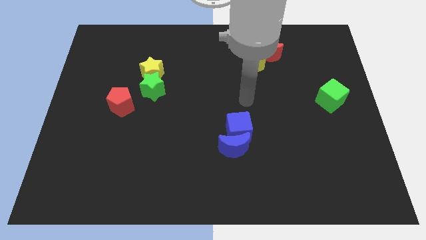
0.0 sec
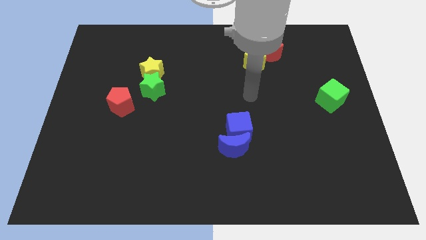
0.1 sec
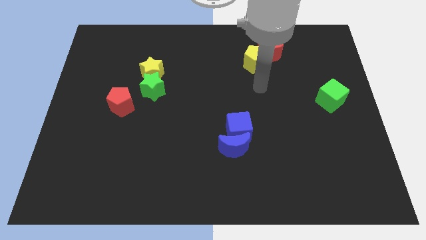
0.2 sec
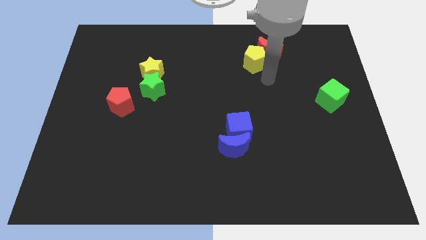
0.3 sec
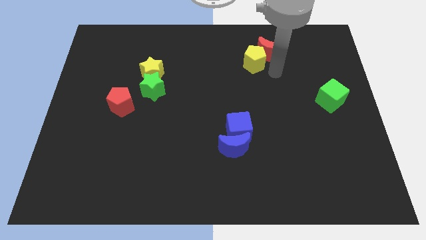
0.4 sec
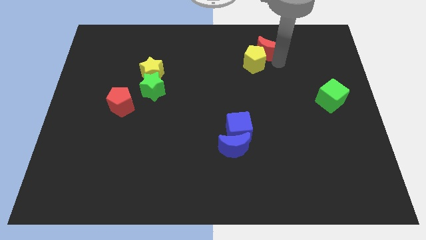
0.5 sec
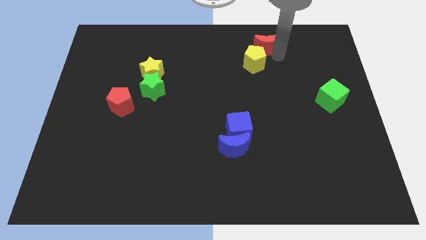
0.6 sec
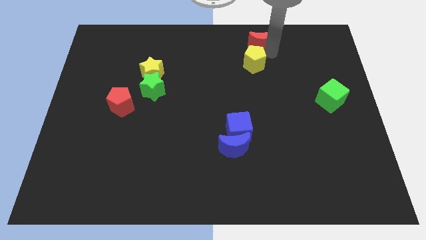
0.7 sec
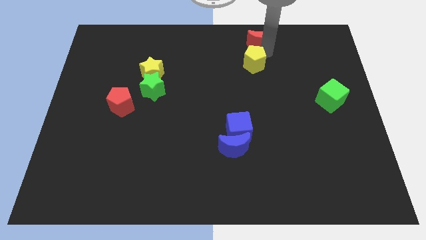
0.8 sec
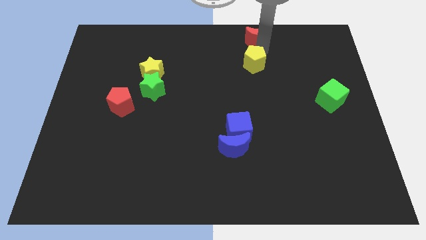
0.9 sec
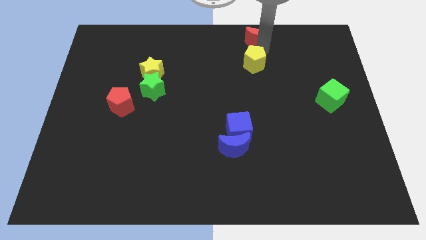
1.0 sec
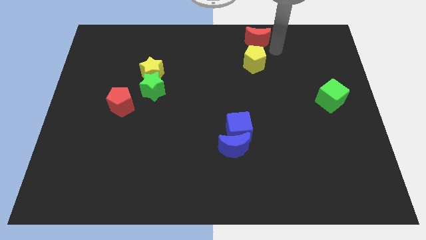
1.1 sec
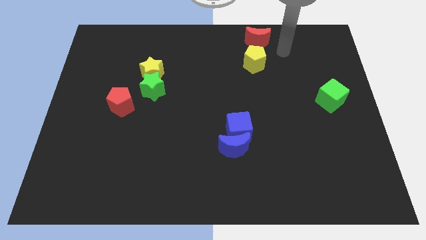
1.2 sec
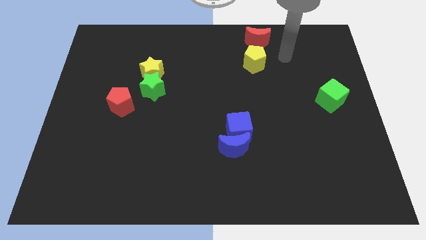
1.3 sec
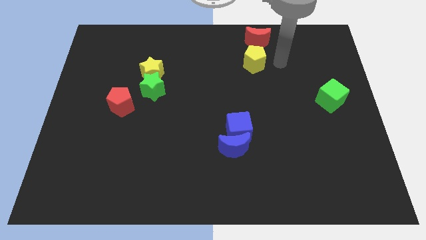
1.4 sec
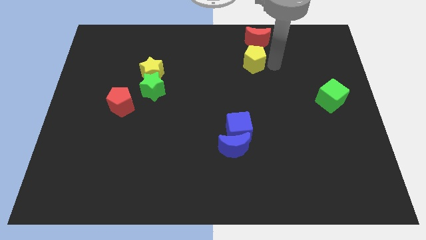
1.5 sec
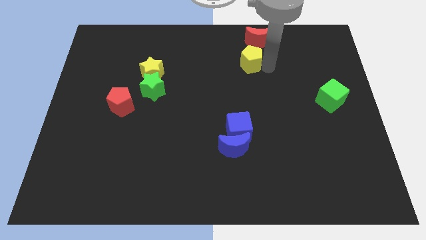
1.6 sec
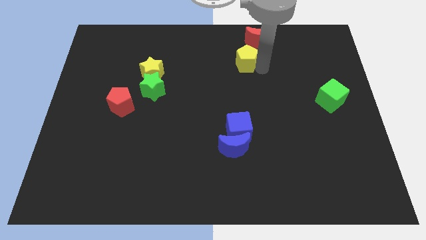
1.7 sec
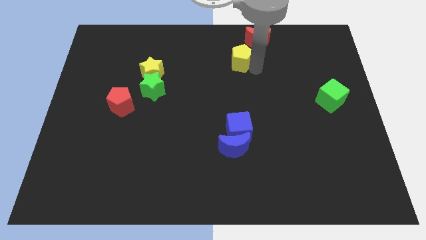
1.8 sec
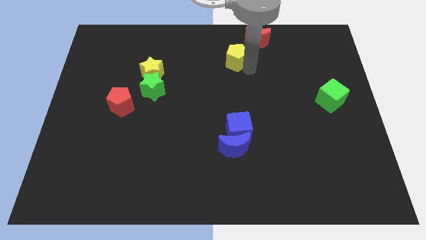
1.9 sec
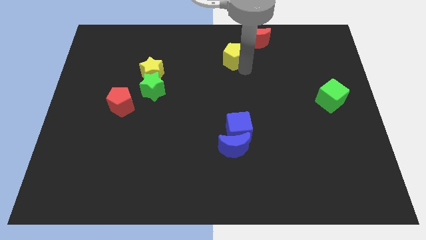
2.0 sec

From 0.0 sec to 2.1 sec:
separate the red moon and yellow pentagon

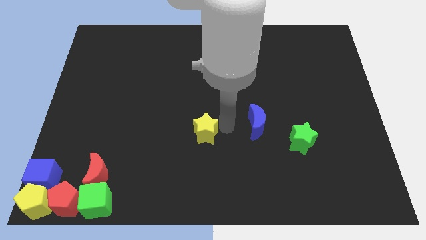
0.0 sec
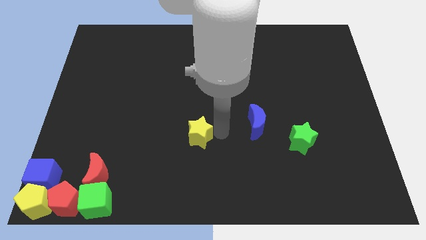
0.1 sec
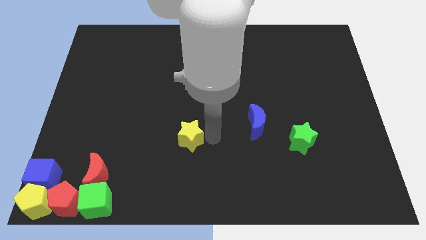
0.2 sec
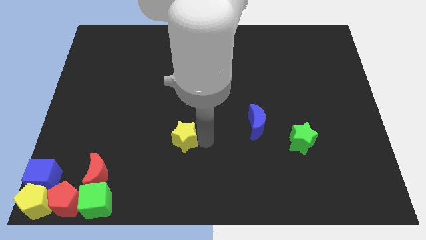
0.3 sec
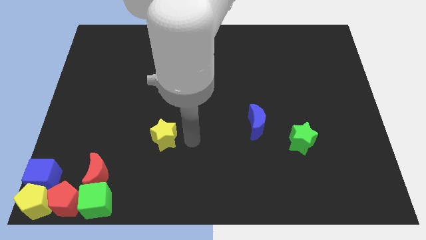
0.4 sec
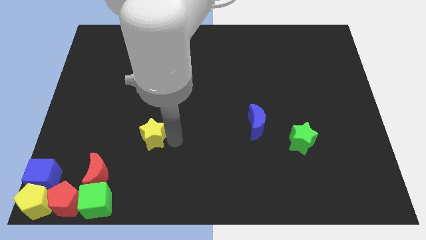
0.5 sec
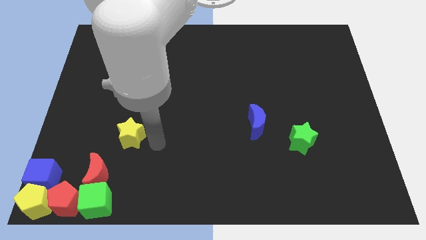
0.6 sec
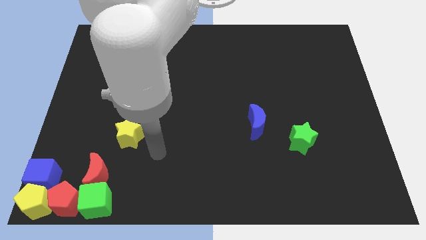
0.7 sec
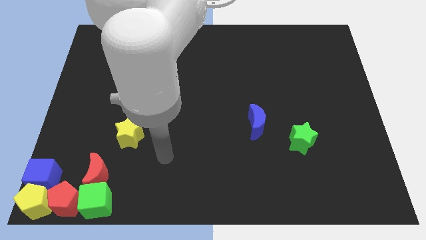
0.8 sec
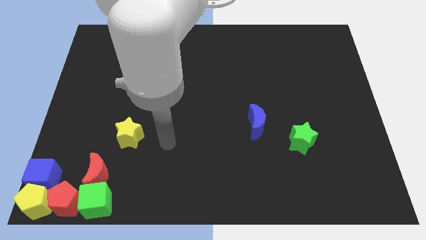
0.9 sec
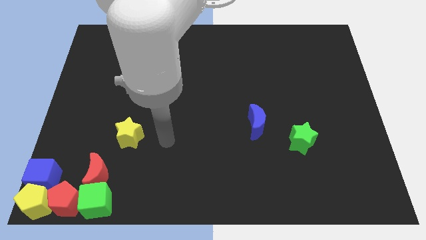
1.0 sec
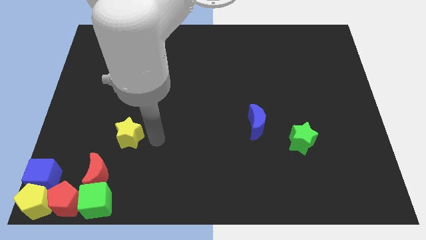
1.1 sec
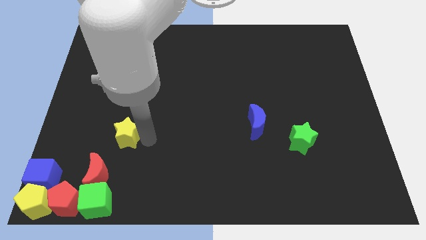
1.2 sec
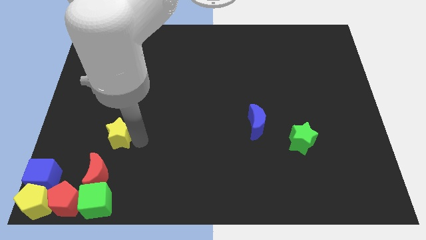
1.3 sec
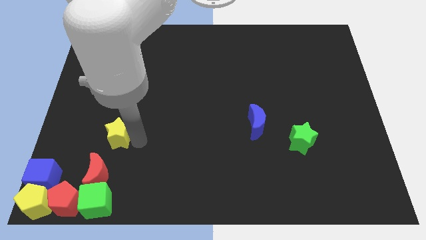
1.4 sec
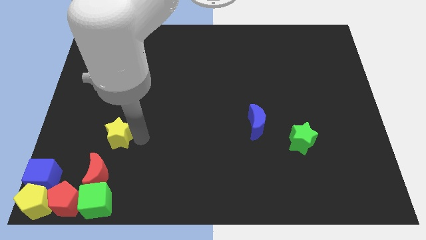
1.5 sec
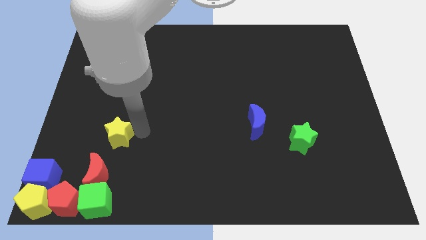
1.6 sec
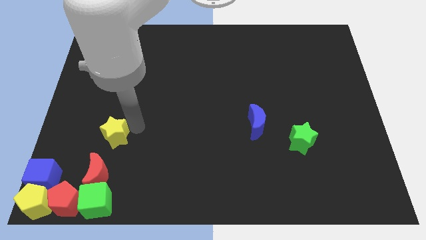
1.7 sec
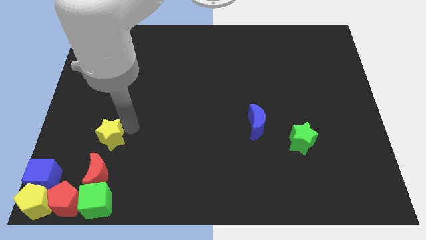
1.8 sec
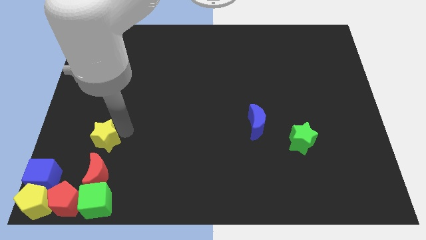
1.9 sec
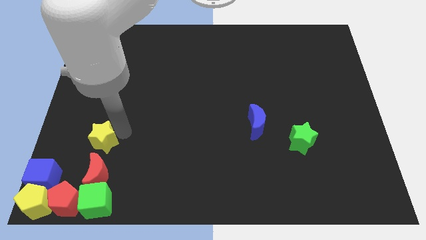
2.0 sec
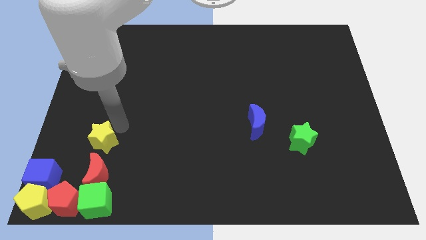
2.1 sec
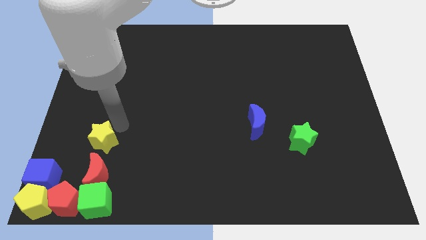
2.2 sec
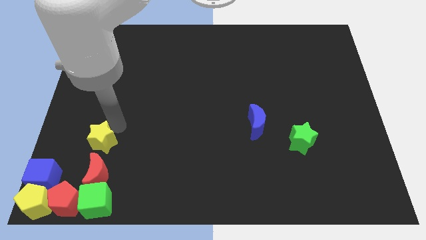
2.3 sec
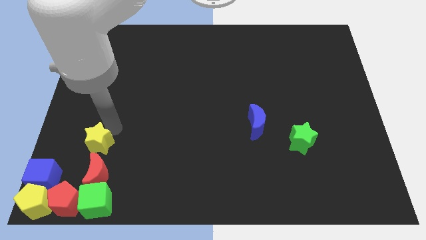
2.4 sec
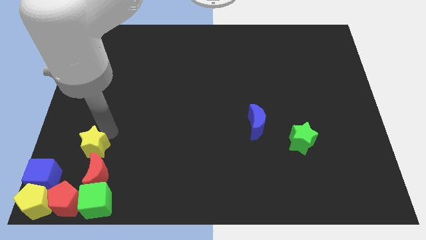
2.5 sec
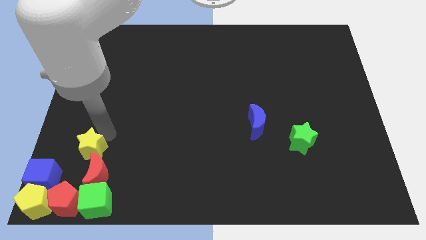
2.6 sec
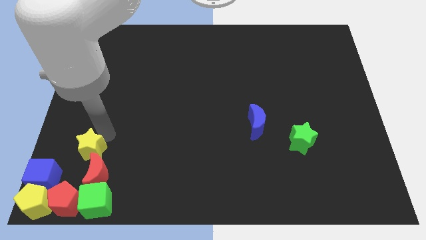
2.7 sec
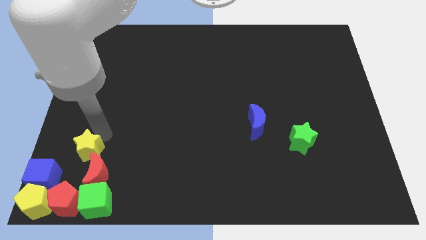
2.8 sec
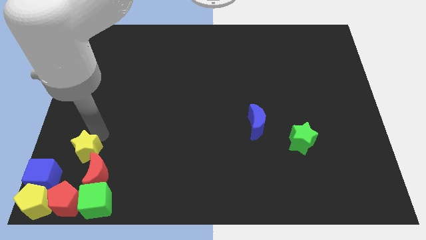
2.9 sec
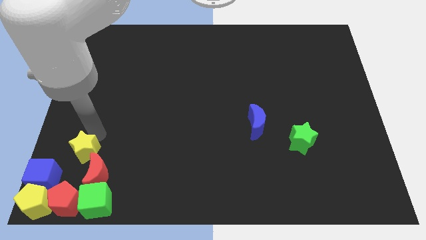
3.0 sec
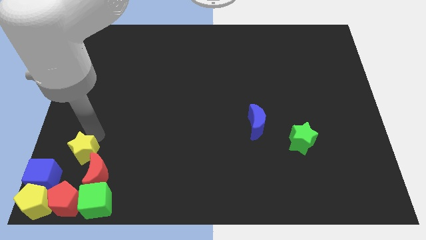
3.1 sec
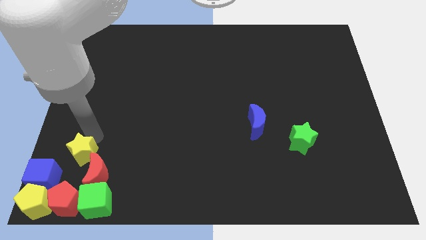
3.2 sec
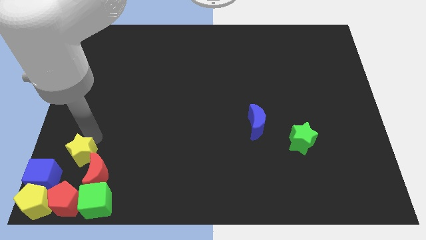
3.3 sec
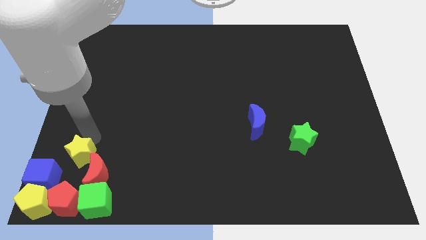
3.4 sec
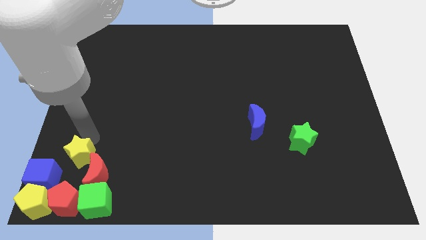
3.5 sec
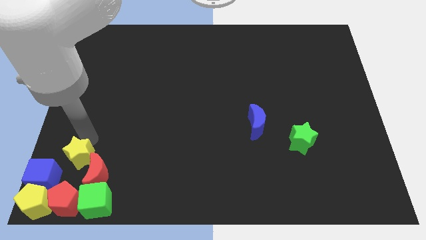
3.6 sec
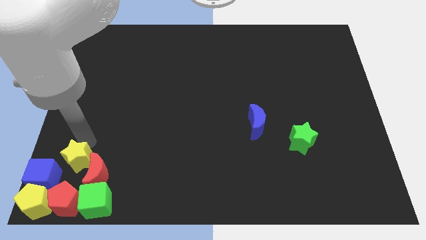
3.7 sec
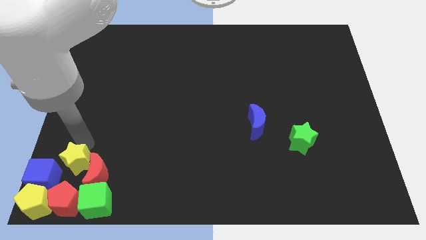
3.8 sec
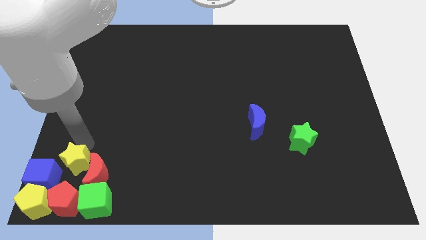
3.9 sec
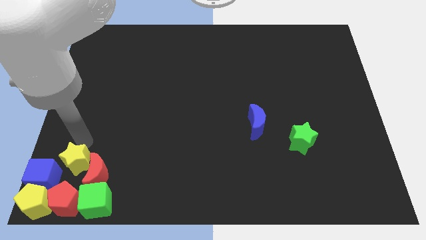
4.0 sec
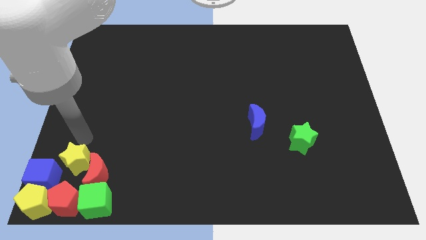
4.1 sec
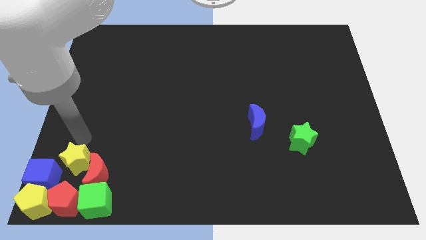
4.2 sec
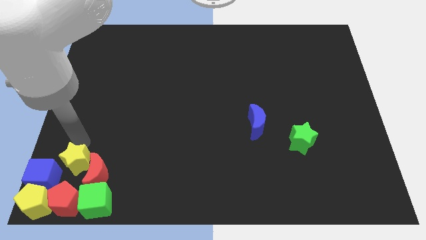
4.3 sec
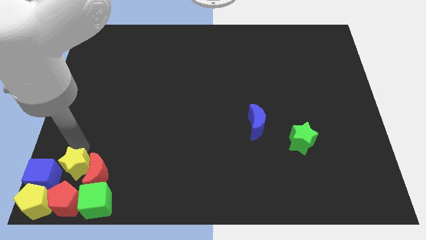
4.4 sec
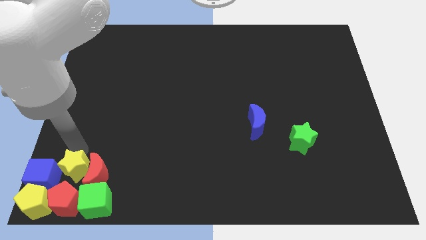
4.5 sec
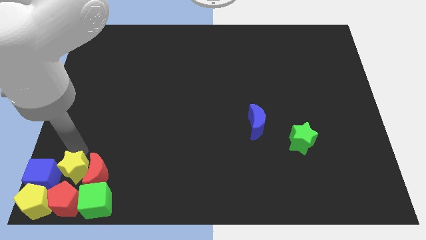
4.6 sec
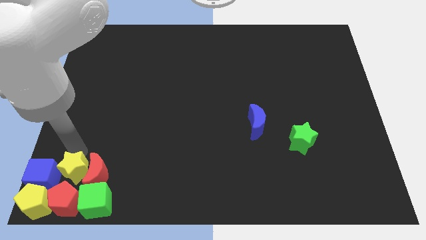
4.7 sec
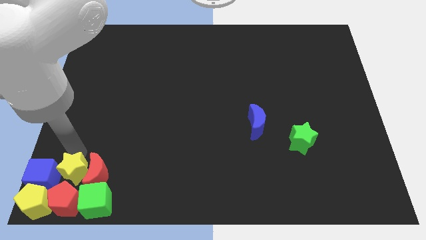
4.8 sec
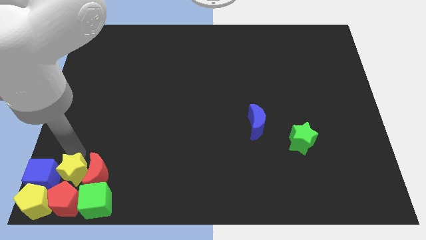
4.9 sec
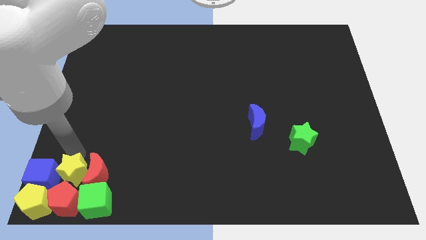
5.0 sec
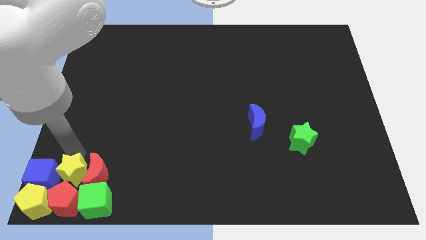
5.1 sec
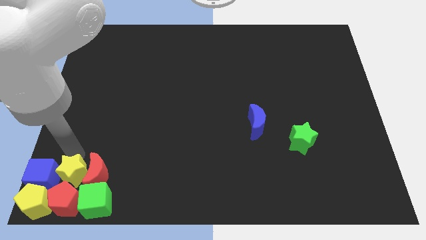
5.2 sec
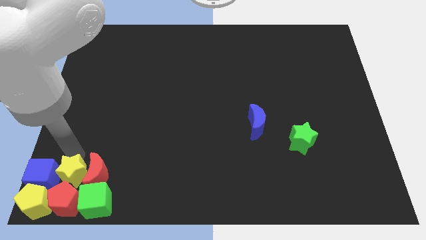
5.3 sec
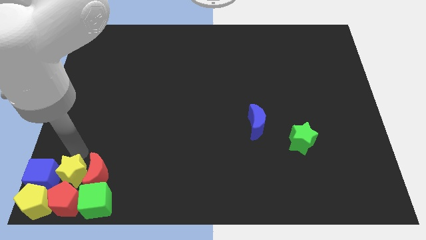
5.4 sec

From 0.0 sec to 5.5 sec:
push the yellow star in between the red crescent and blue cube

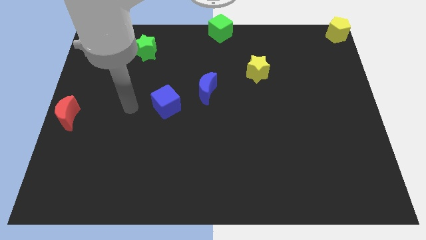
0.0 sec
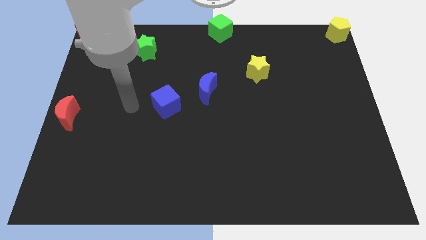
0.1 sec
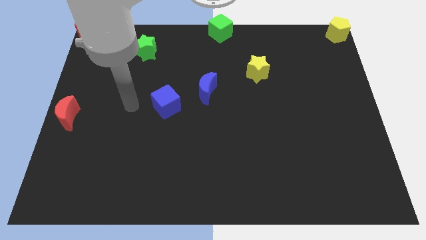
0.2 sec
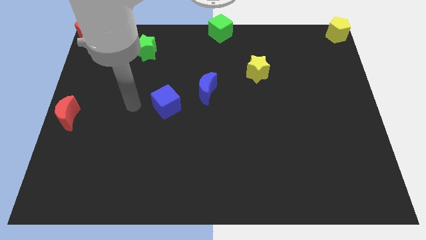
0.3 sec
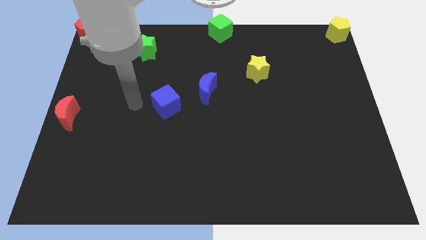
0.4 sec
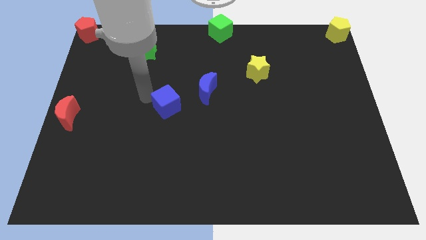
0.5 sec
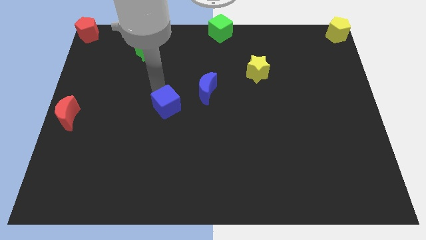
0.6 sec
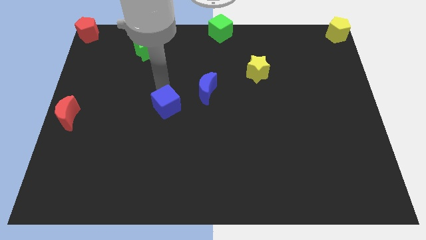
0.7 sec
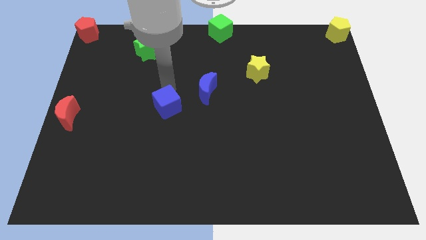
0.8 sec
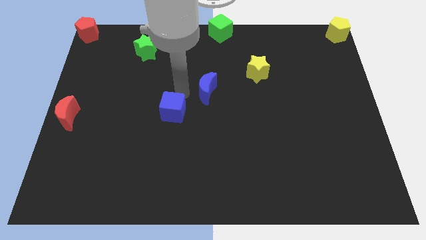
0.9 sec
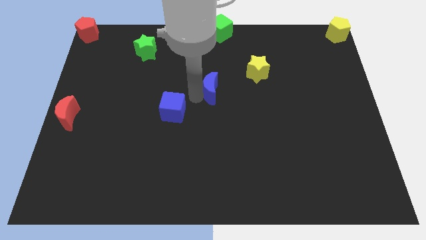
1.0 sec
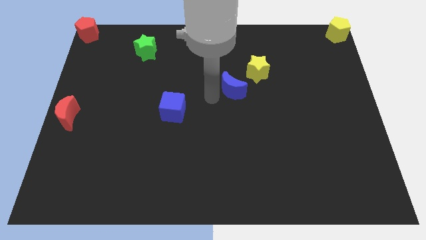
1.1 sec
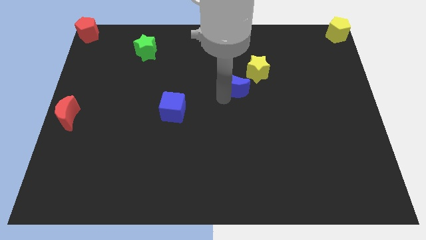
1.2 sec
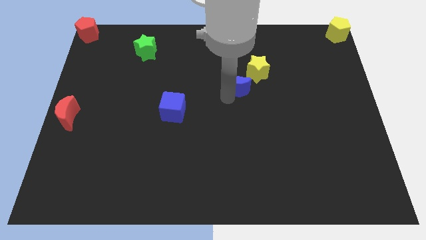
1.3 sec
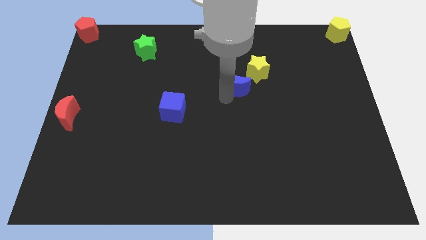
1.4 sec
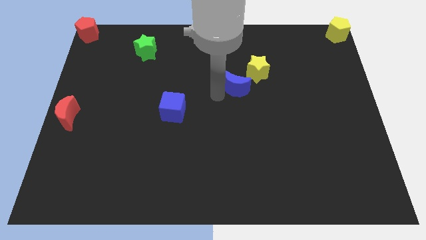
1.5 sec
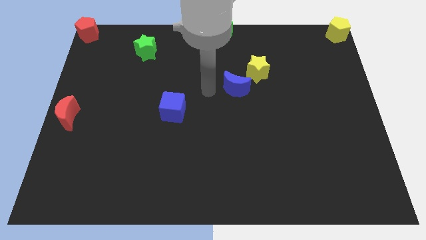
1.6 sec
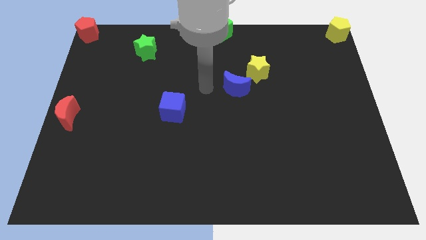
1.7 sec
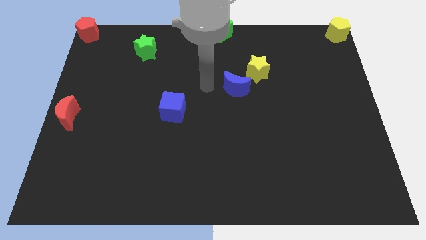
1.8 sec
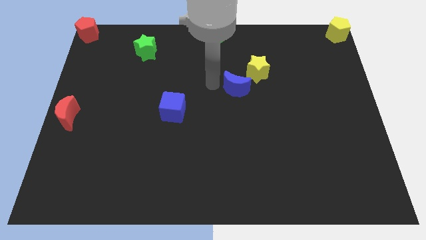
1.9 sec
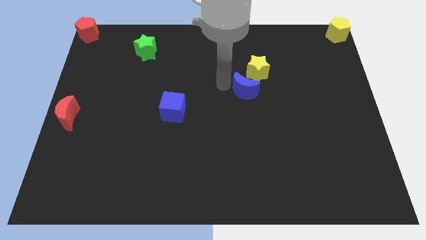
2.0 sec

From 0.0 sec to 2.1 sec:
move the blue crescent slightly towards the yellow star
